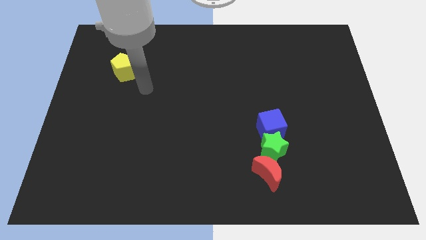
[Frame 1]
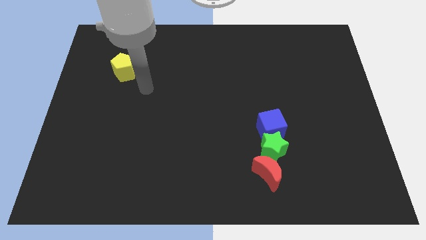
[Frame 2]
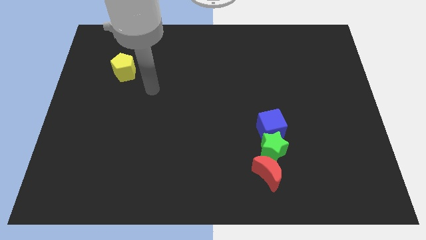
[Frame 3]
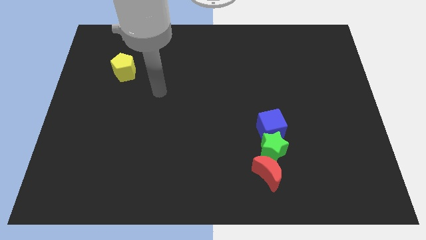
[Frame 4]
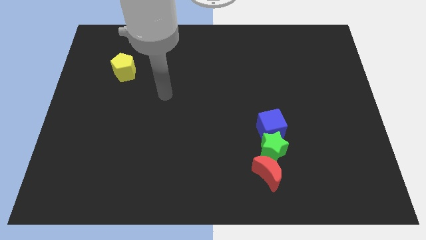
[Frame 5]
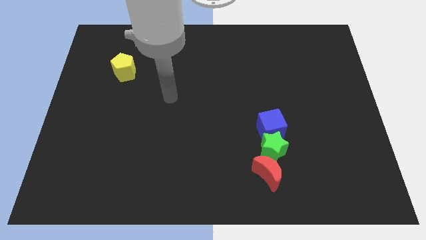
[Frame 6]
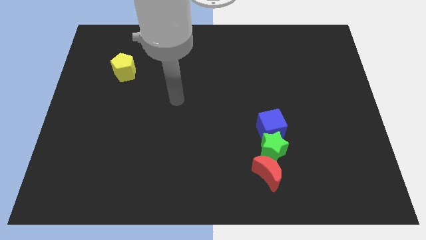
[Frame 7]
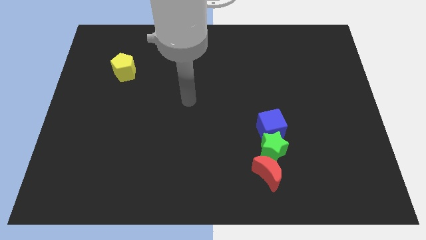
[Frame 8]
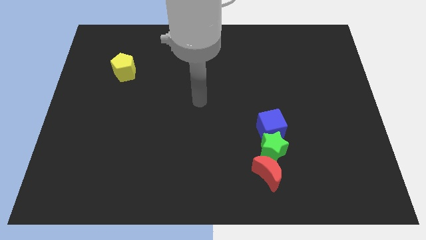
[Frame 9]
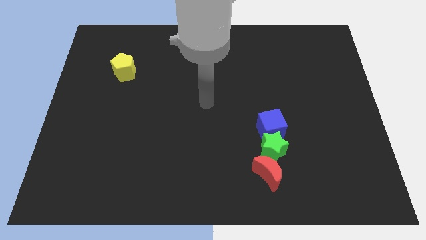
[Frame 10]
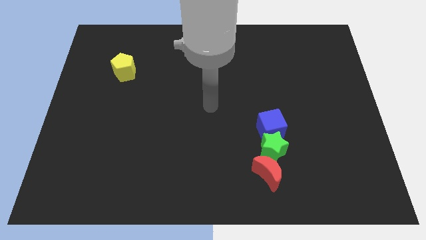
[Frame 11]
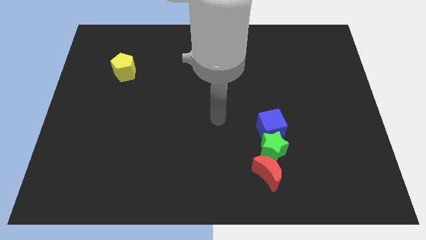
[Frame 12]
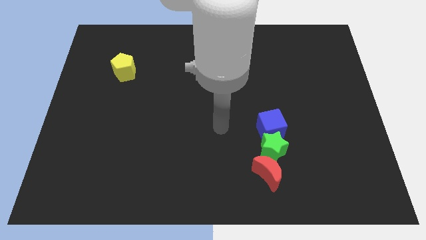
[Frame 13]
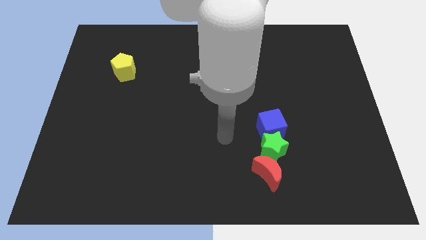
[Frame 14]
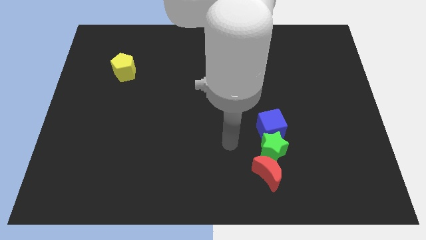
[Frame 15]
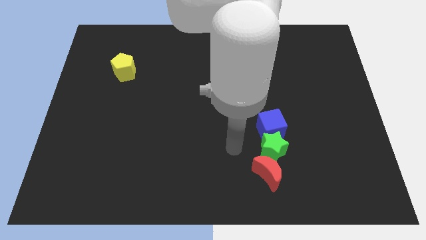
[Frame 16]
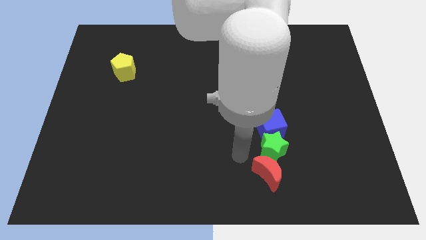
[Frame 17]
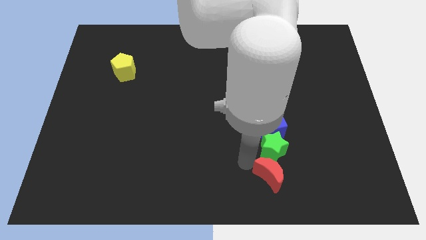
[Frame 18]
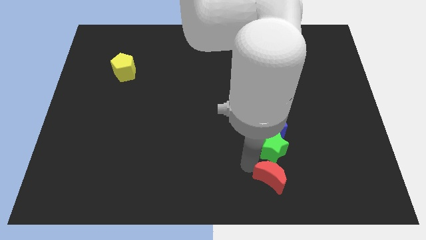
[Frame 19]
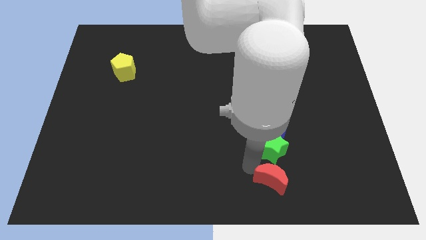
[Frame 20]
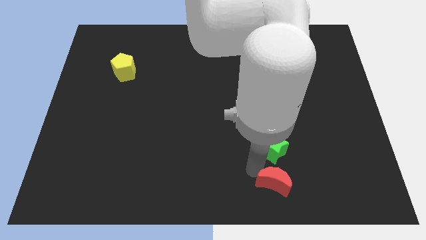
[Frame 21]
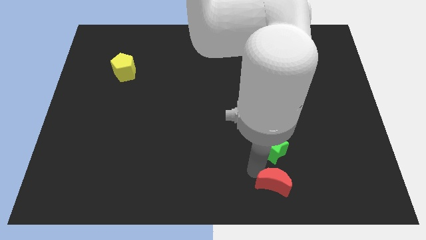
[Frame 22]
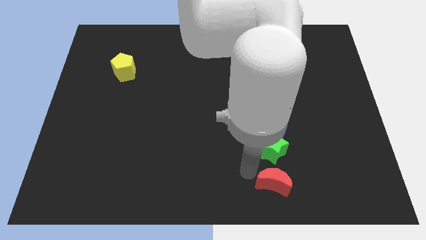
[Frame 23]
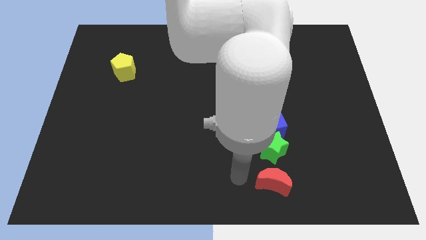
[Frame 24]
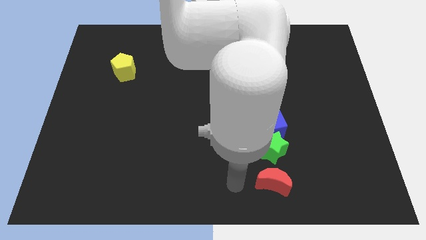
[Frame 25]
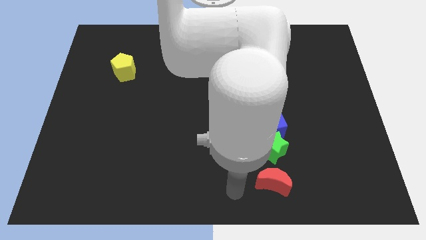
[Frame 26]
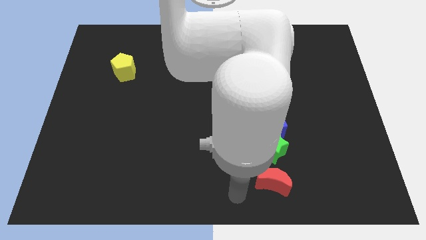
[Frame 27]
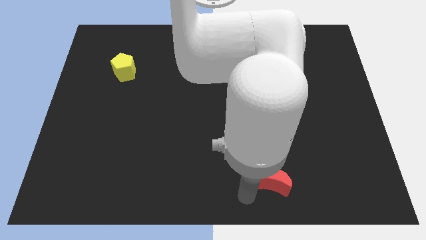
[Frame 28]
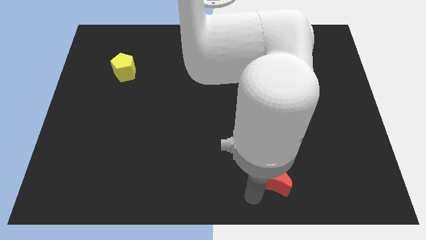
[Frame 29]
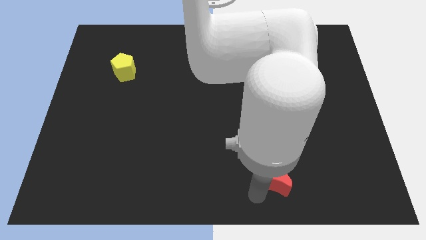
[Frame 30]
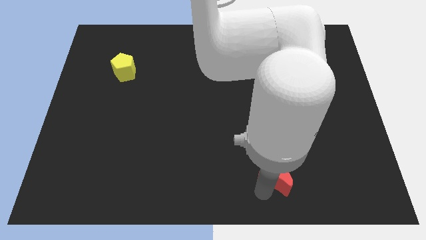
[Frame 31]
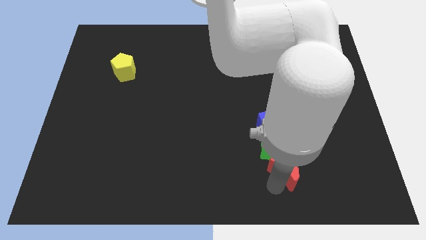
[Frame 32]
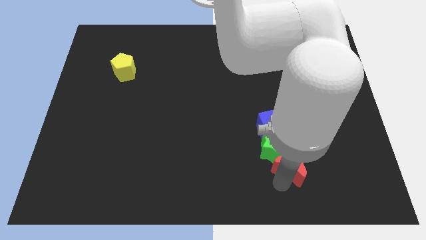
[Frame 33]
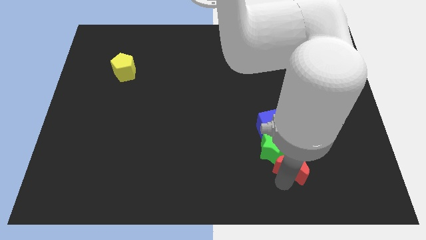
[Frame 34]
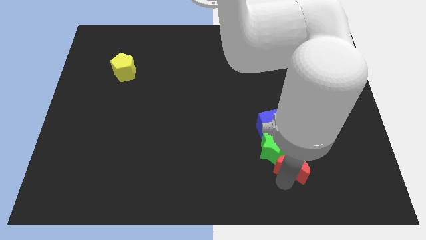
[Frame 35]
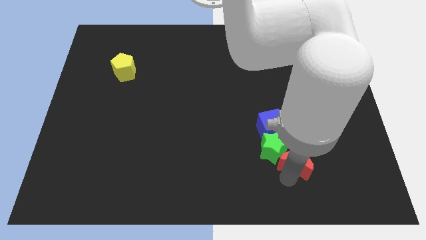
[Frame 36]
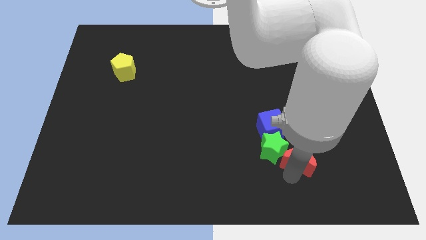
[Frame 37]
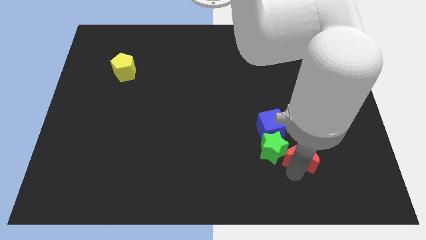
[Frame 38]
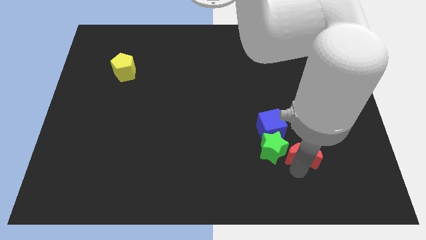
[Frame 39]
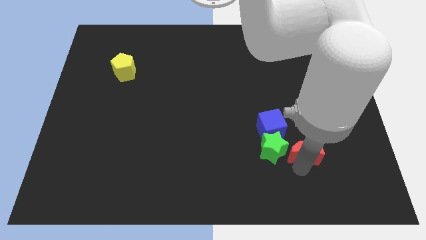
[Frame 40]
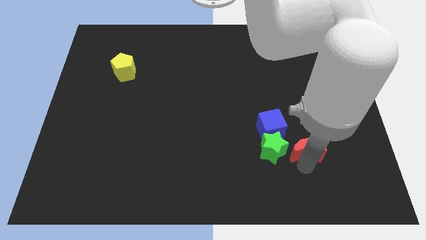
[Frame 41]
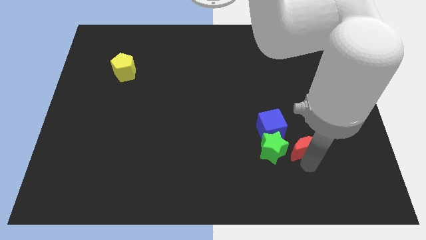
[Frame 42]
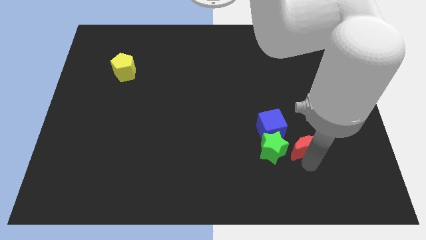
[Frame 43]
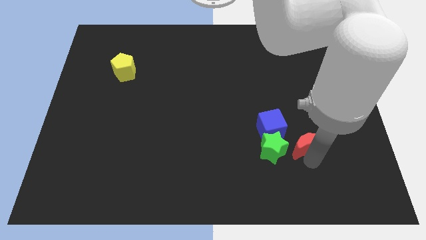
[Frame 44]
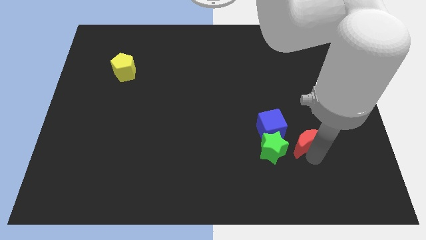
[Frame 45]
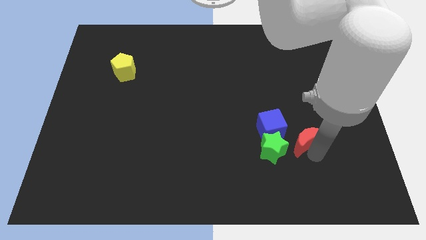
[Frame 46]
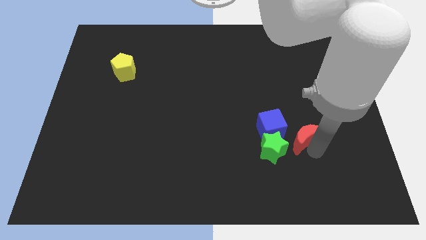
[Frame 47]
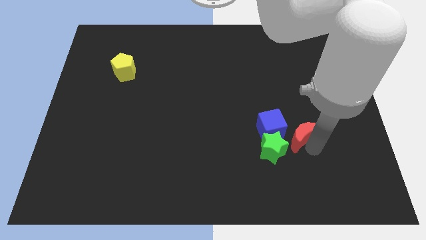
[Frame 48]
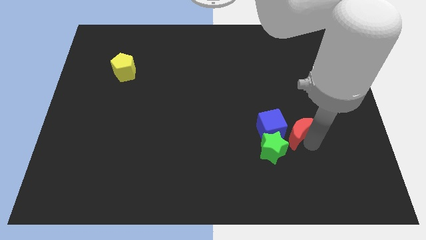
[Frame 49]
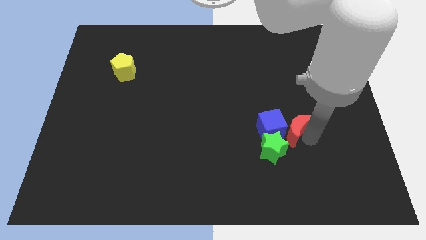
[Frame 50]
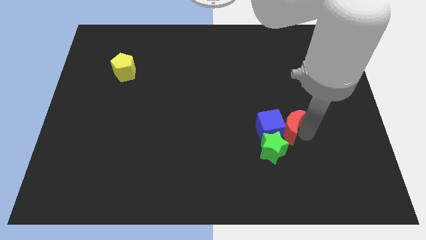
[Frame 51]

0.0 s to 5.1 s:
push the red block towards the cube

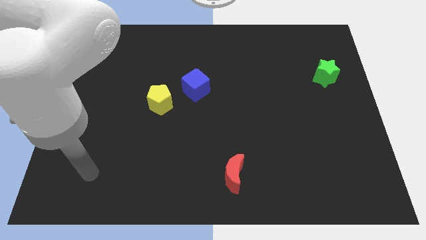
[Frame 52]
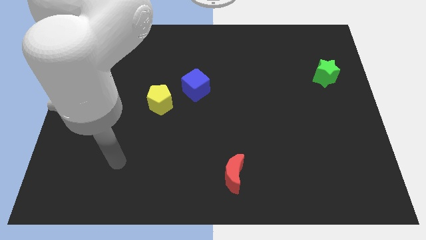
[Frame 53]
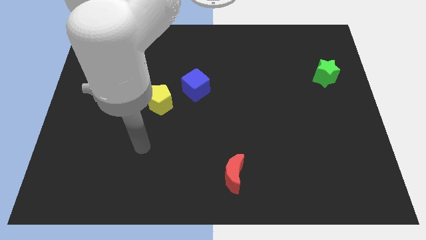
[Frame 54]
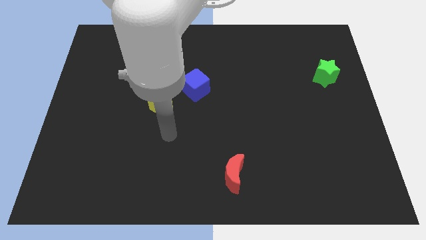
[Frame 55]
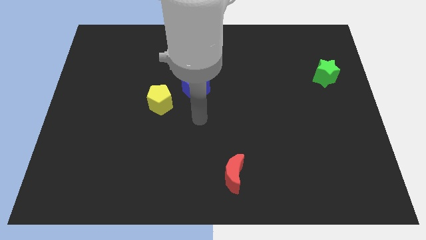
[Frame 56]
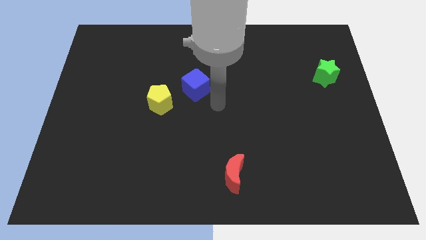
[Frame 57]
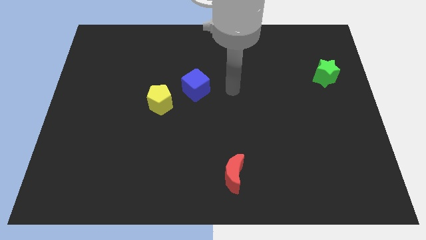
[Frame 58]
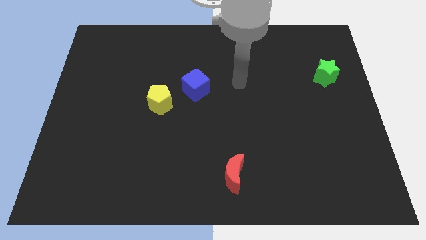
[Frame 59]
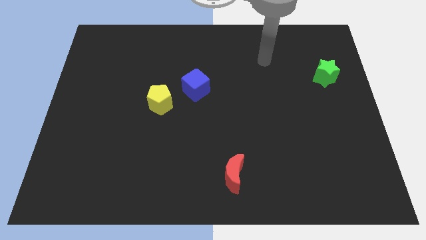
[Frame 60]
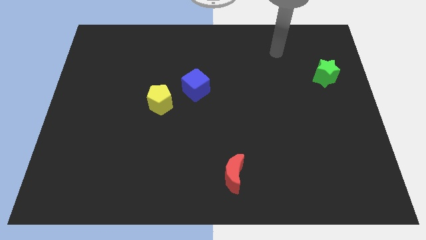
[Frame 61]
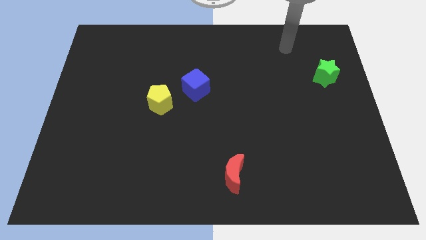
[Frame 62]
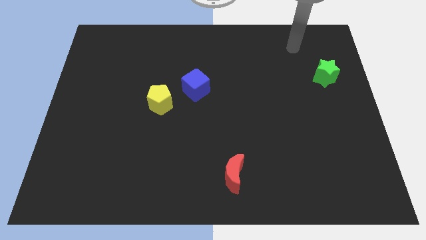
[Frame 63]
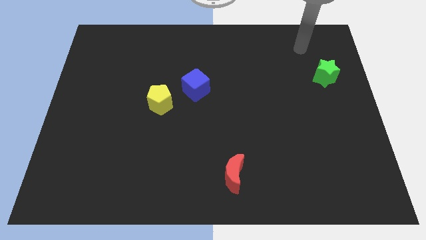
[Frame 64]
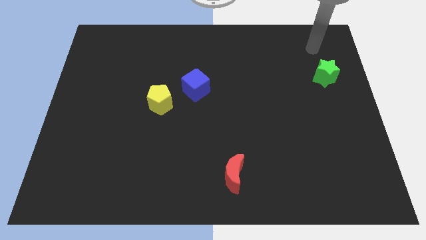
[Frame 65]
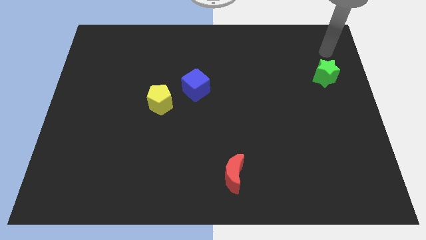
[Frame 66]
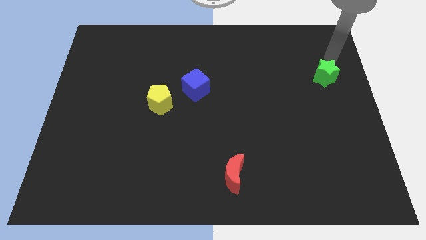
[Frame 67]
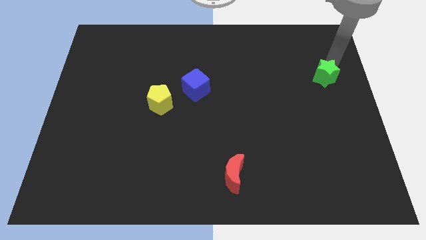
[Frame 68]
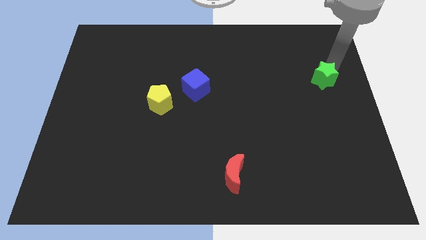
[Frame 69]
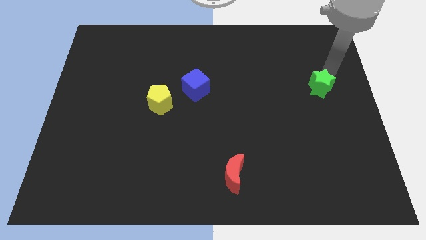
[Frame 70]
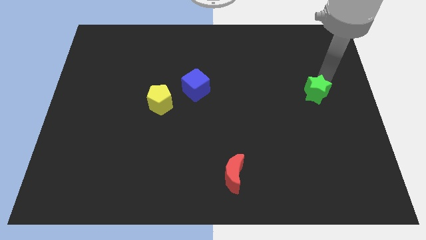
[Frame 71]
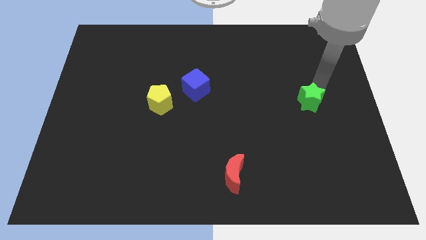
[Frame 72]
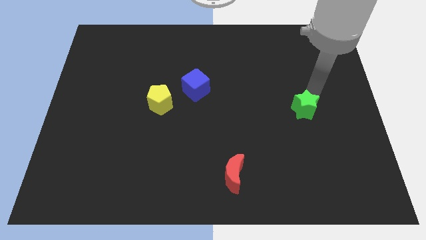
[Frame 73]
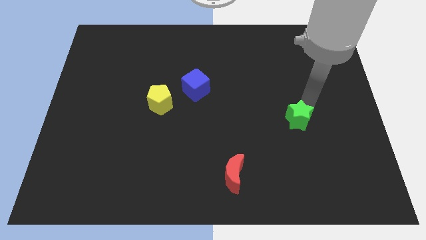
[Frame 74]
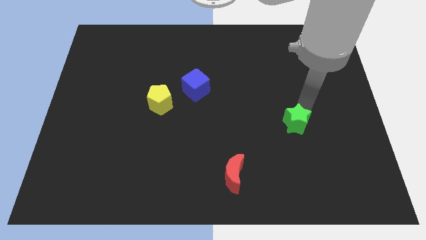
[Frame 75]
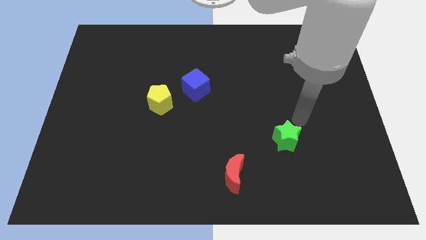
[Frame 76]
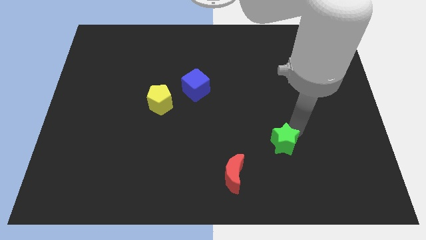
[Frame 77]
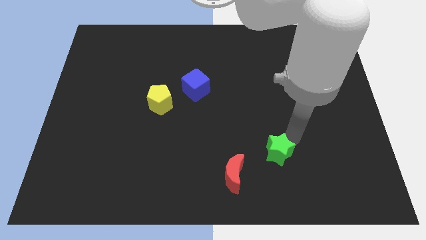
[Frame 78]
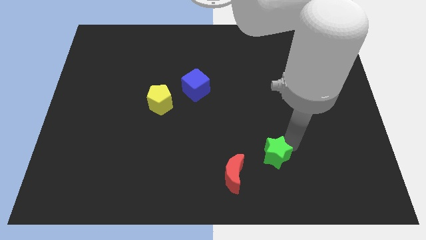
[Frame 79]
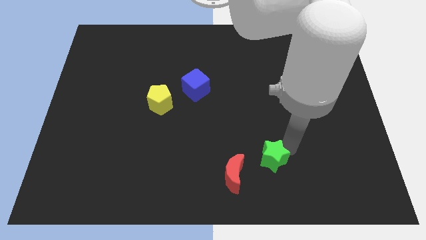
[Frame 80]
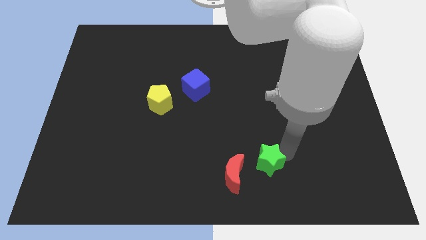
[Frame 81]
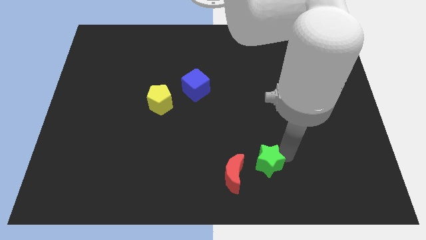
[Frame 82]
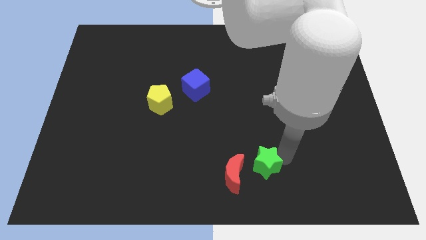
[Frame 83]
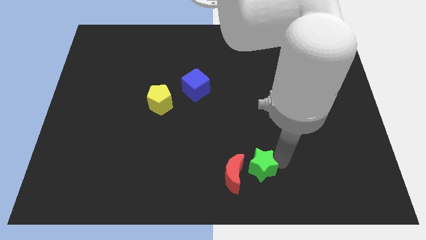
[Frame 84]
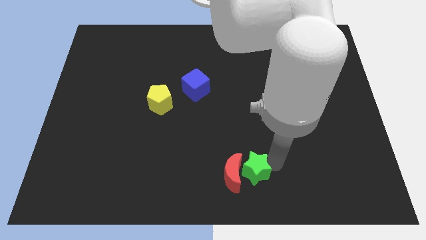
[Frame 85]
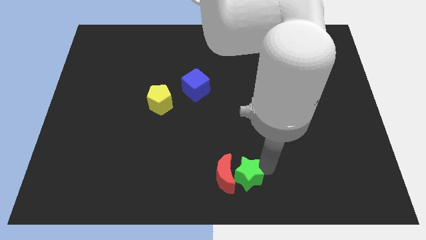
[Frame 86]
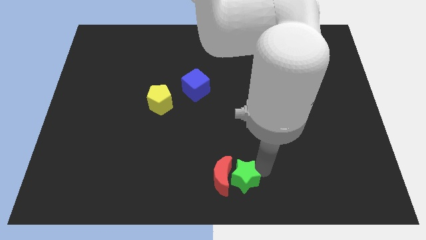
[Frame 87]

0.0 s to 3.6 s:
put the green star close to the moon

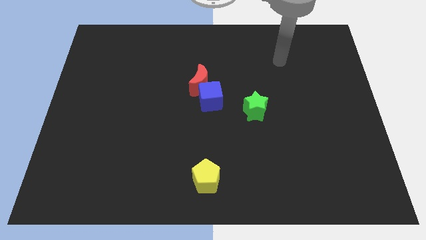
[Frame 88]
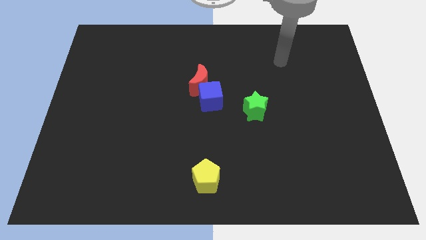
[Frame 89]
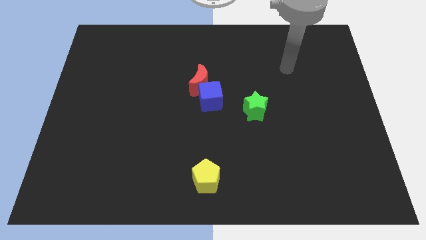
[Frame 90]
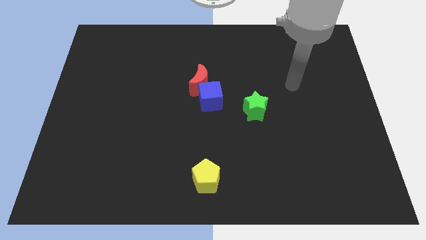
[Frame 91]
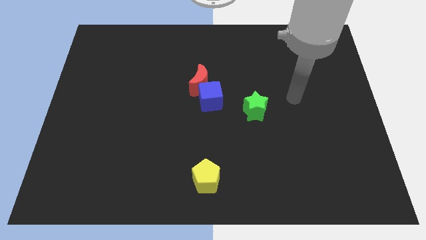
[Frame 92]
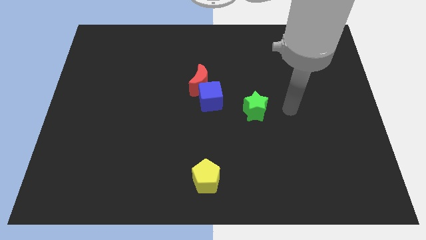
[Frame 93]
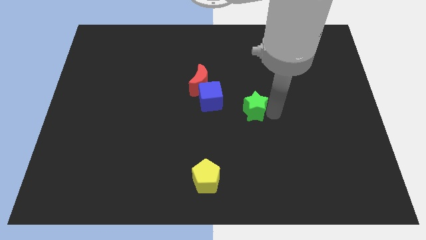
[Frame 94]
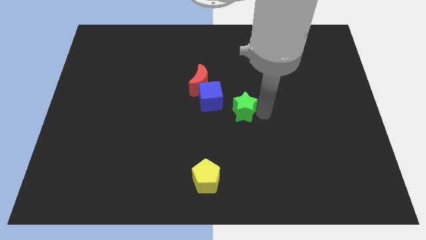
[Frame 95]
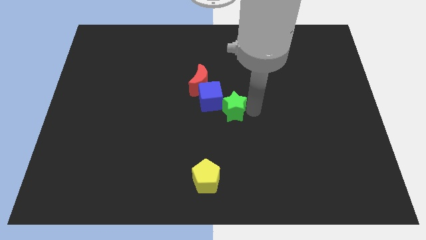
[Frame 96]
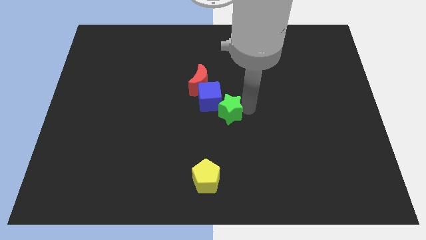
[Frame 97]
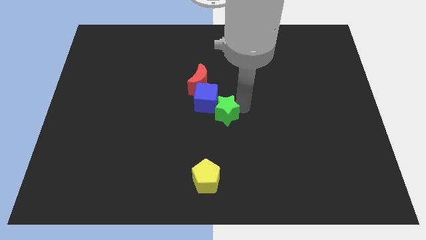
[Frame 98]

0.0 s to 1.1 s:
push the green block next to the cube
